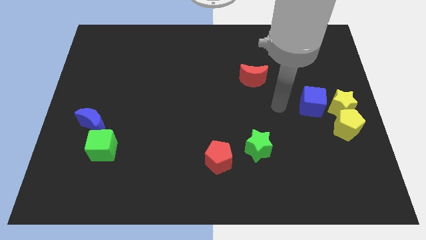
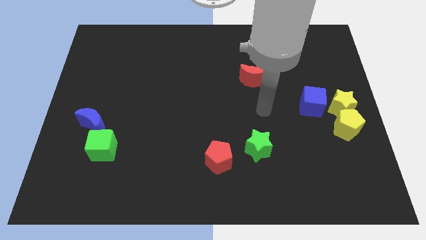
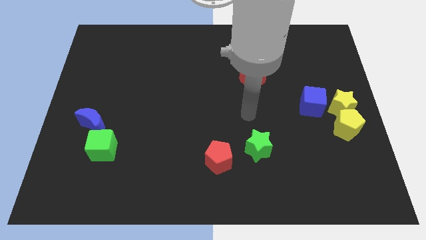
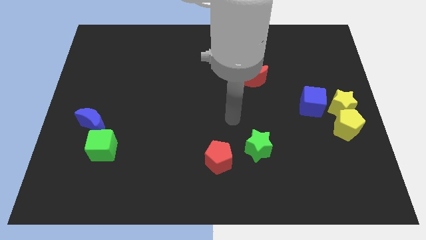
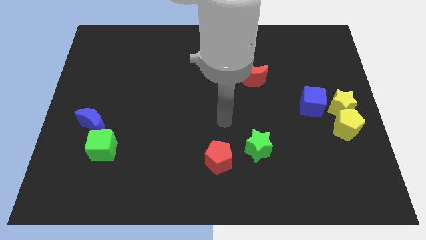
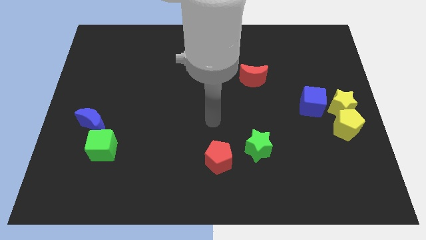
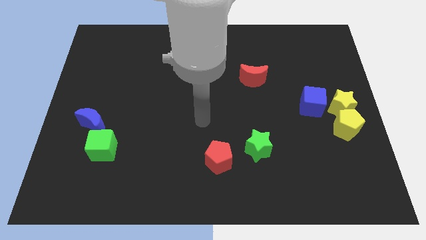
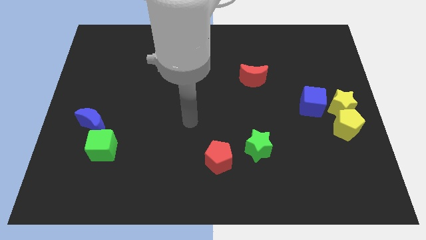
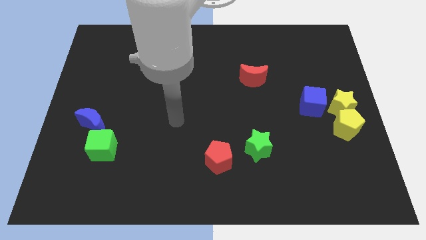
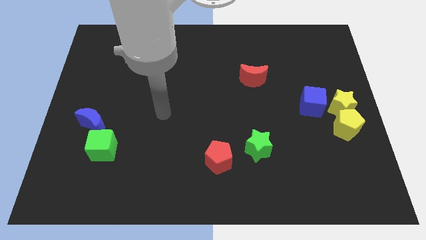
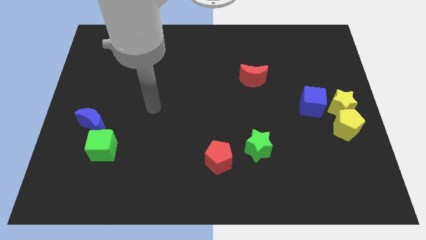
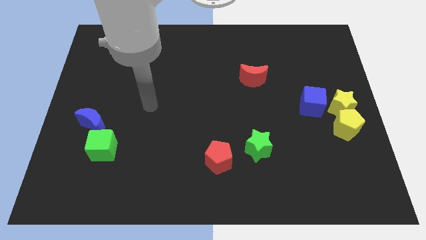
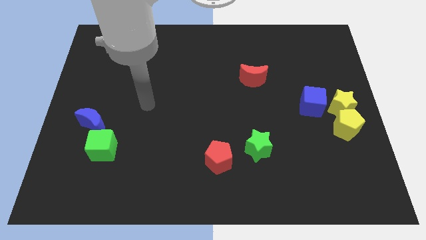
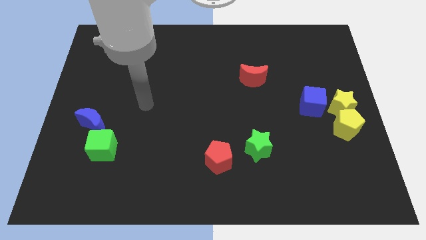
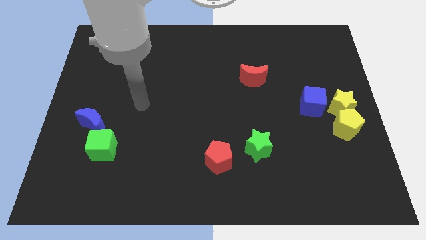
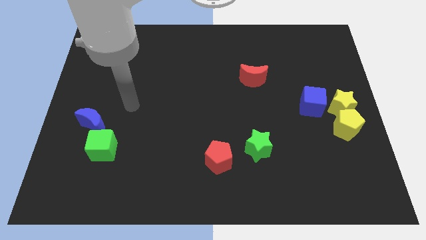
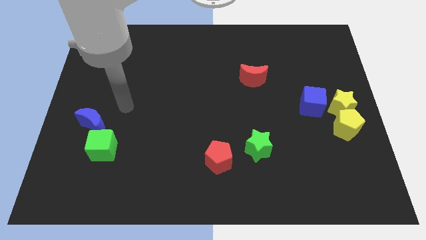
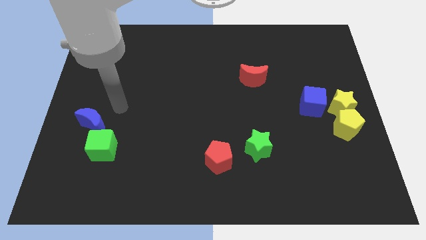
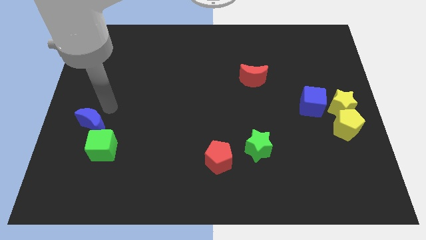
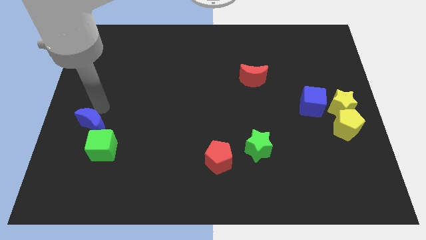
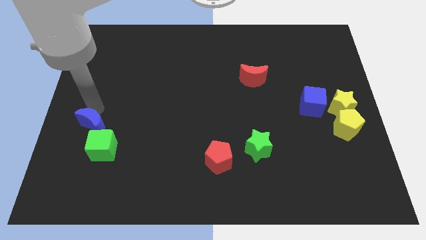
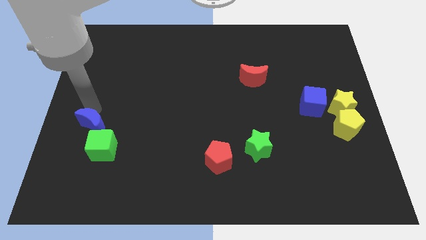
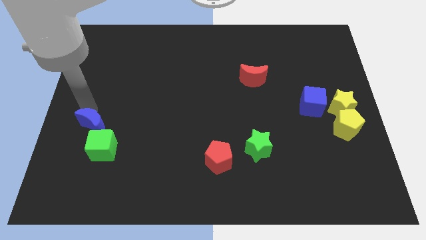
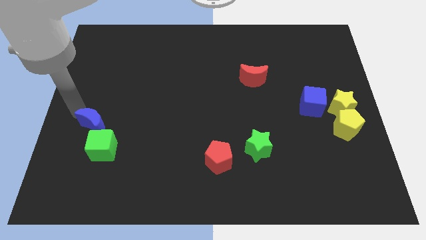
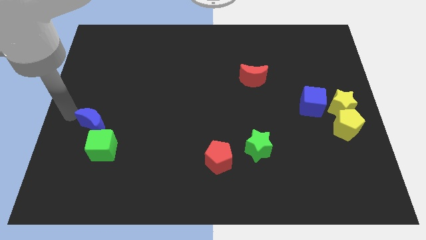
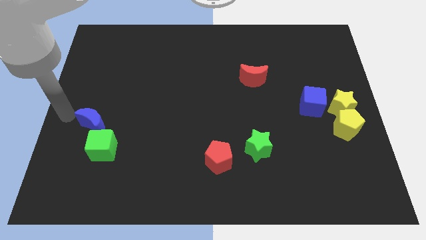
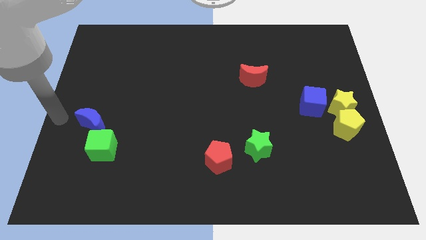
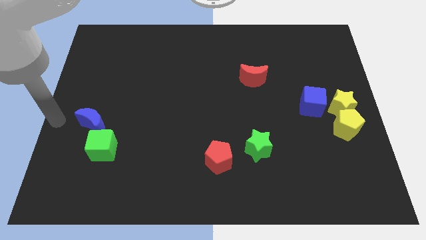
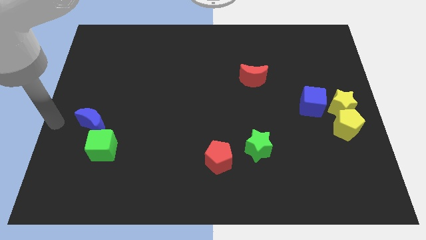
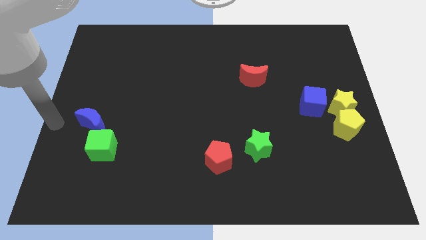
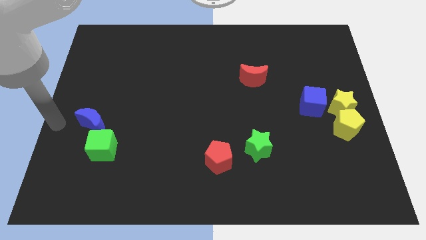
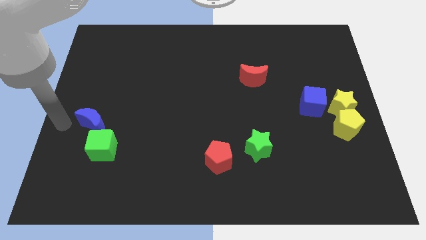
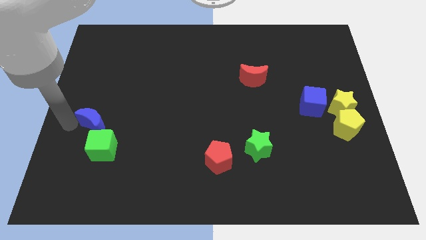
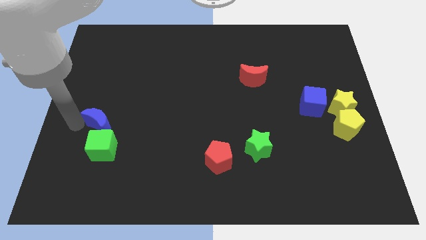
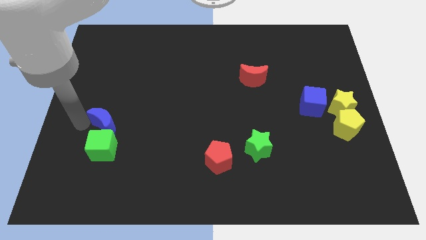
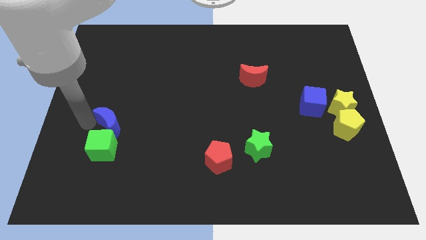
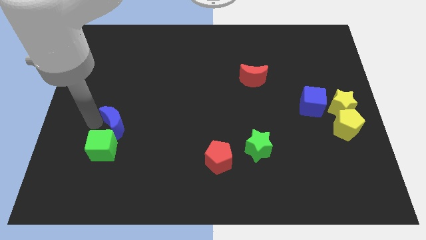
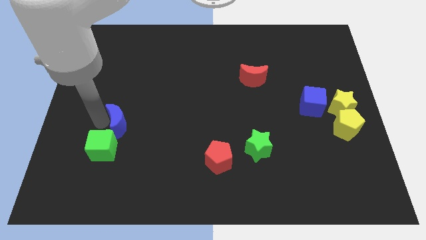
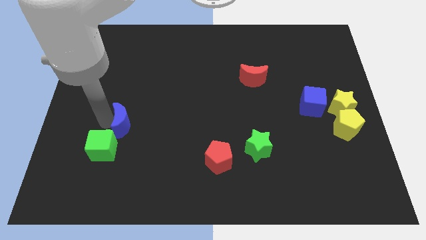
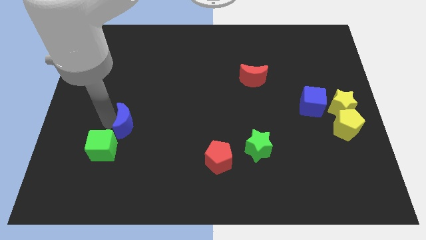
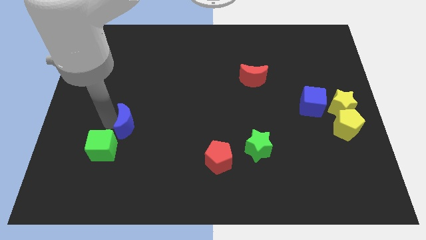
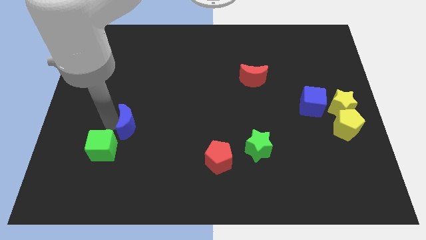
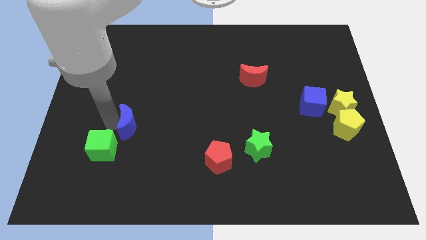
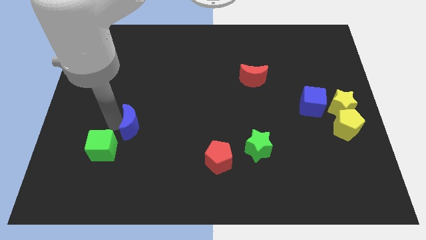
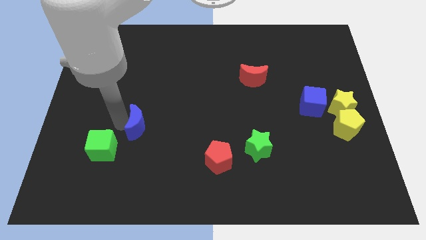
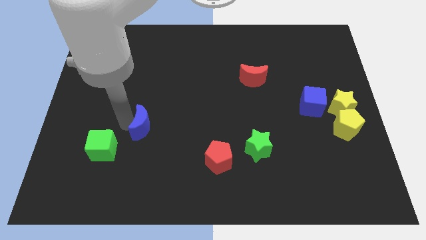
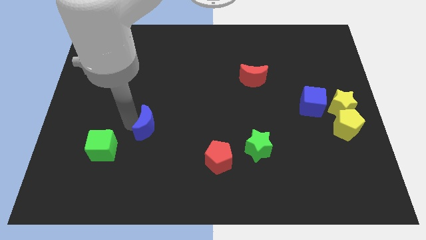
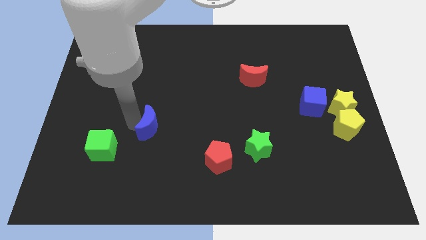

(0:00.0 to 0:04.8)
push the blue moon away from the green cube

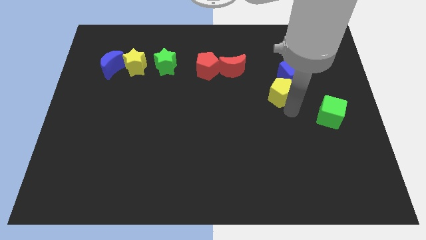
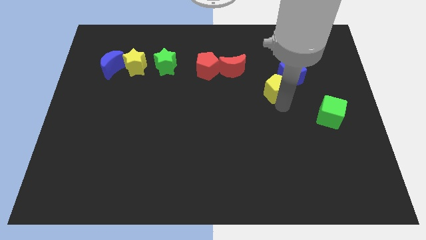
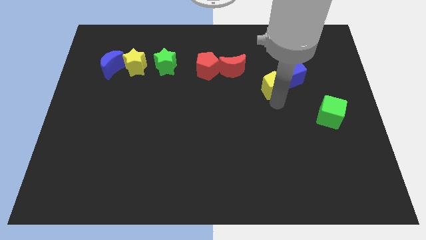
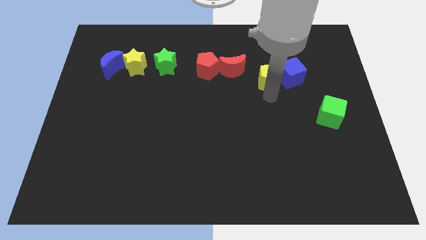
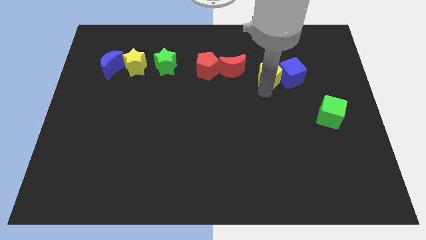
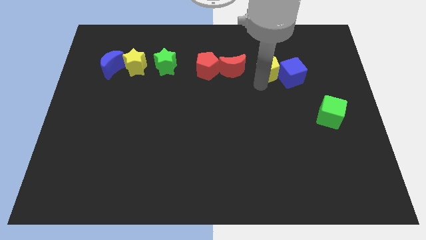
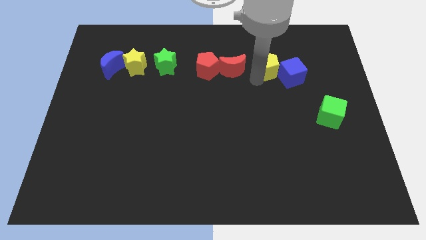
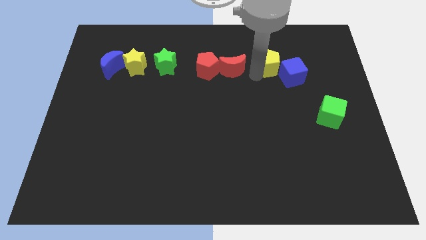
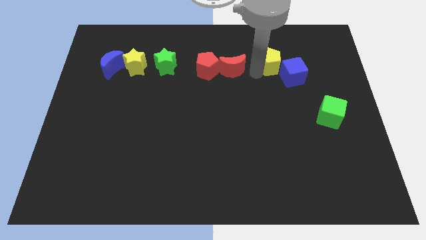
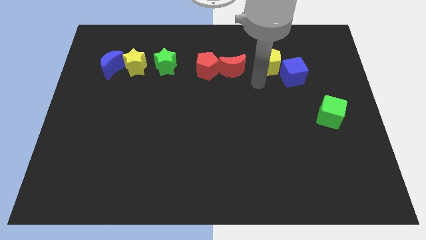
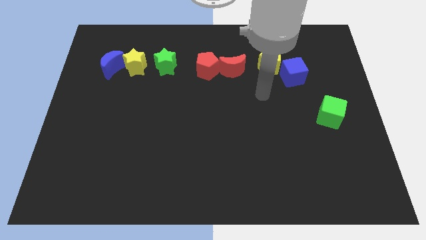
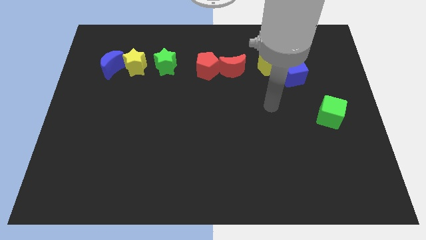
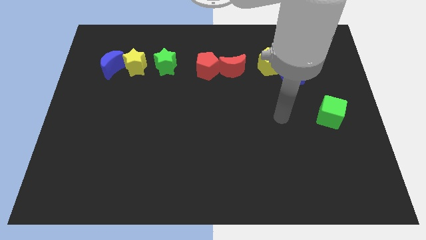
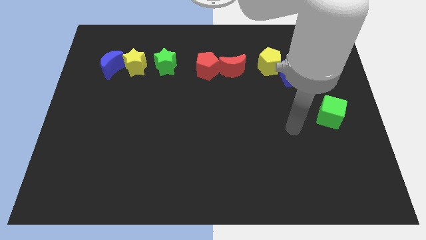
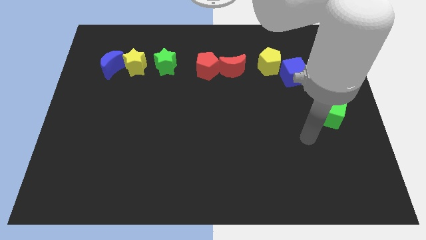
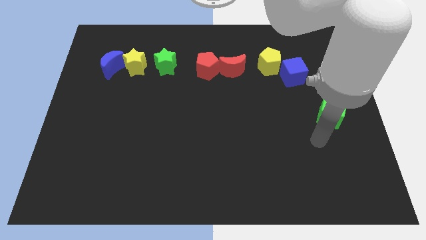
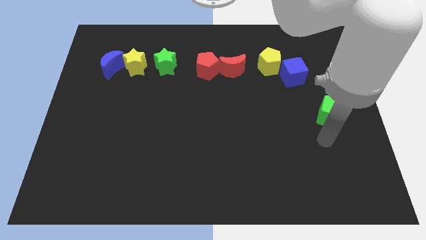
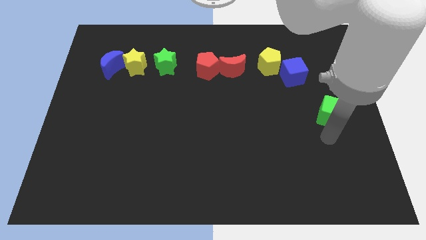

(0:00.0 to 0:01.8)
push the yellow pentagon to the right side of the red pentagon

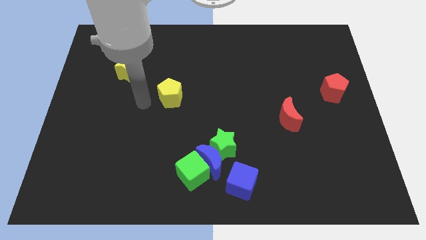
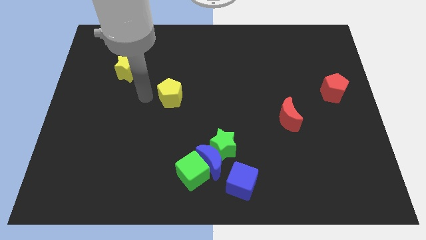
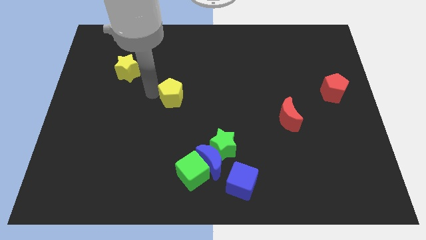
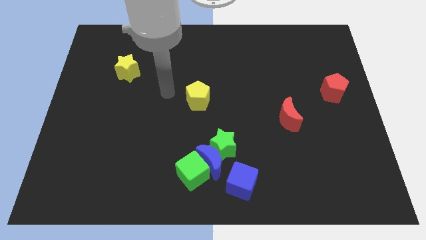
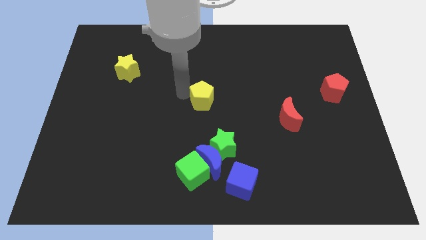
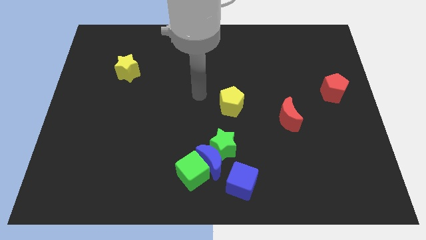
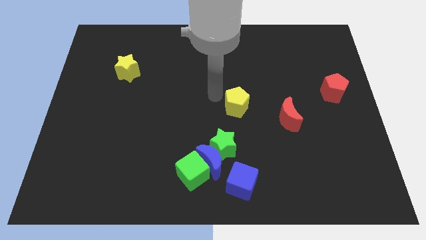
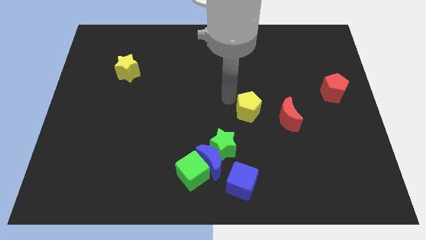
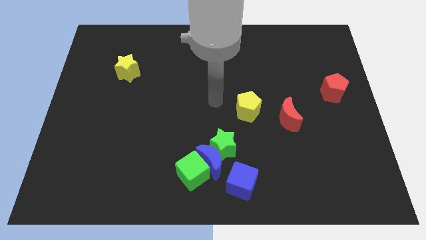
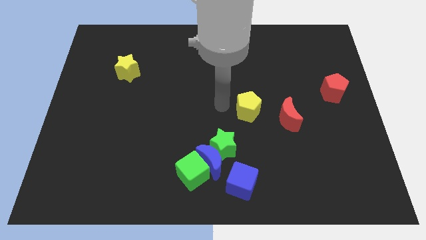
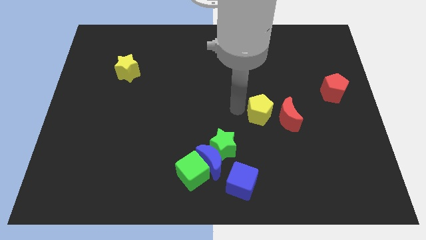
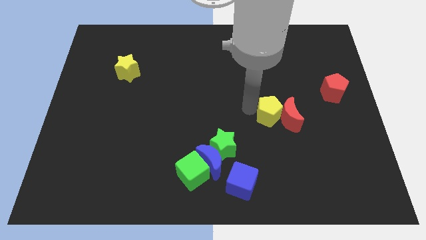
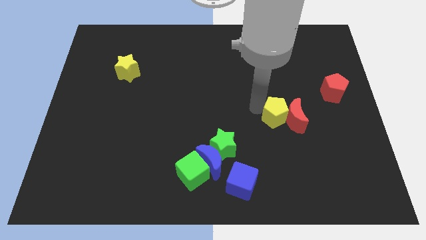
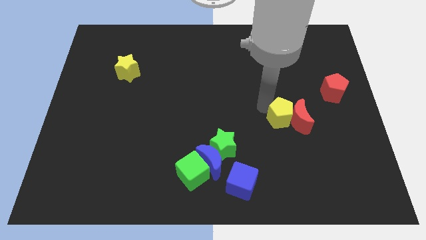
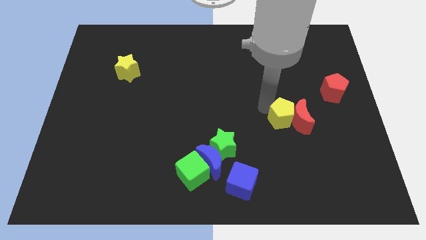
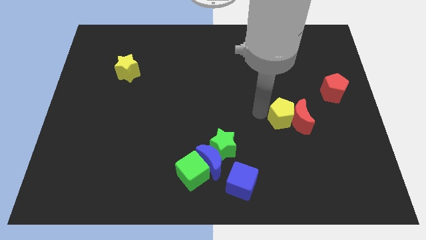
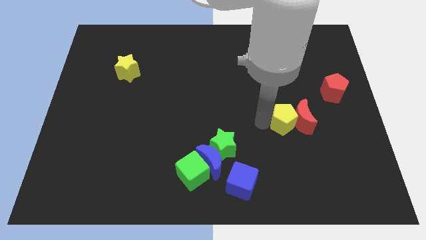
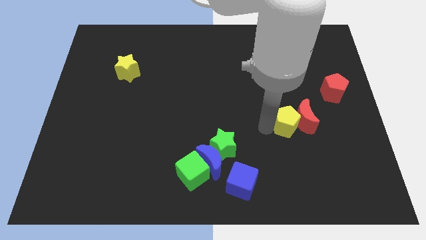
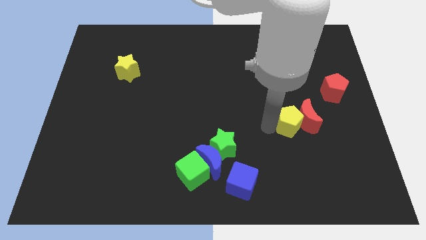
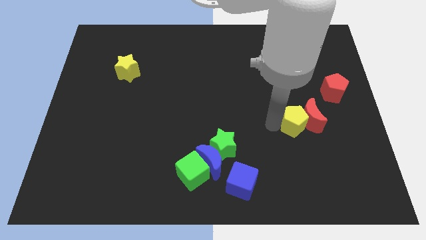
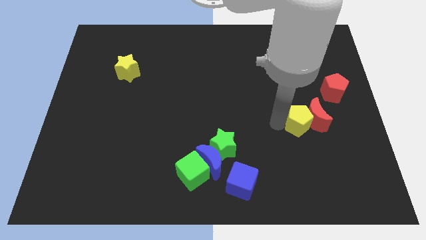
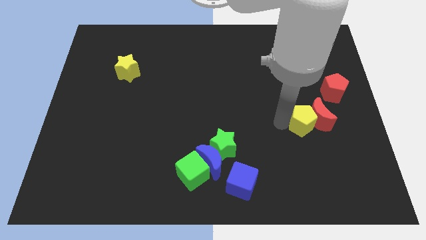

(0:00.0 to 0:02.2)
move the yellow pentagon into the red crescent

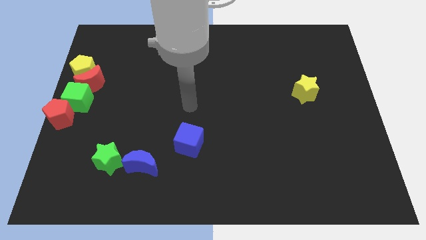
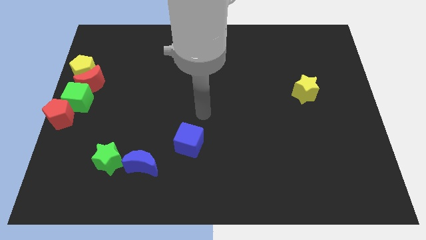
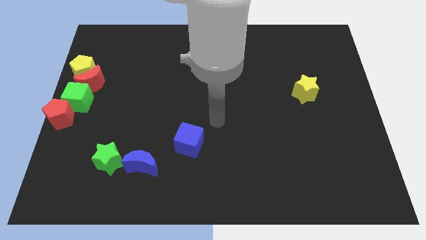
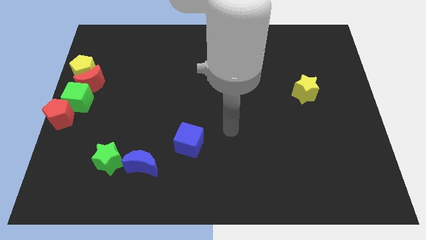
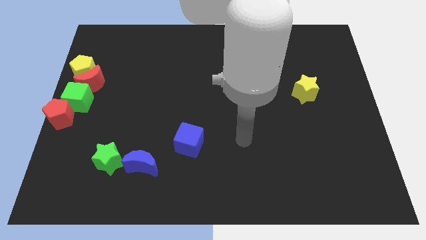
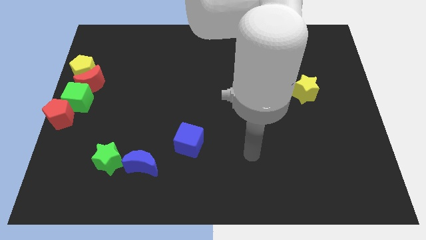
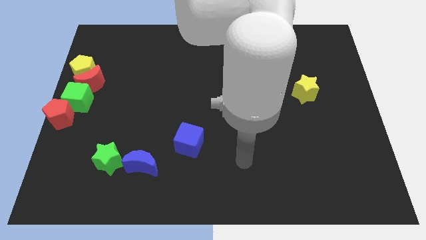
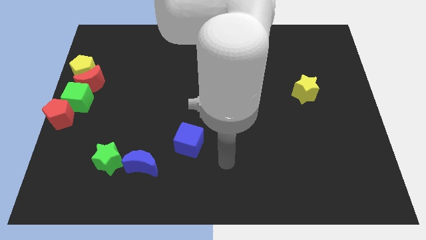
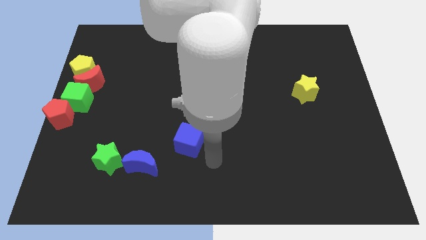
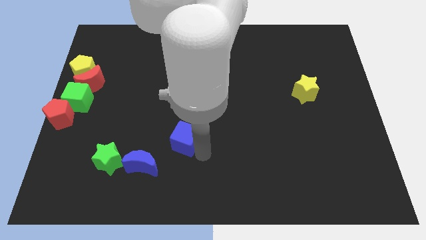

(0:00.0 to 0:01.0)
tap the blue cube
